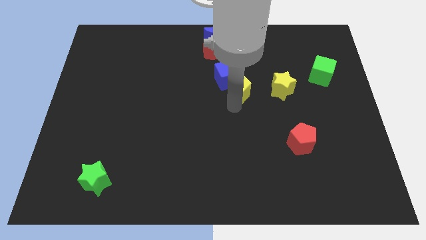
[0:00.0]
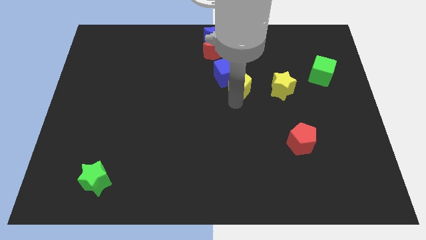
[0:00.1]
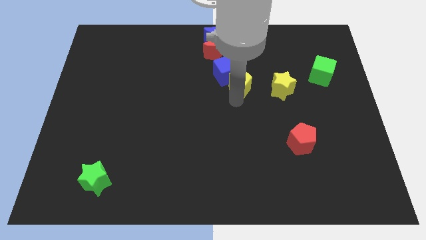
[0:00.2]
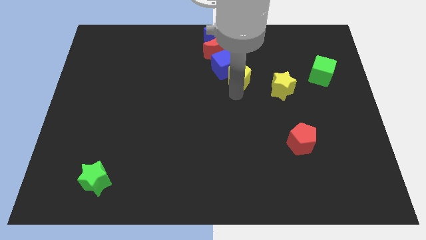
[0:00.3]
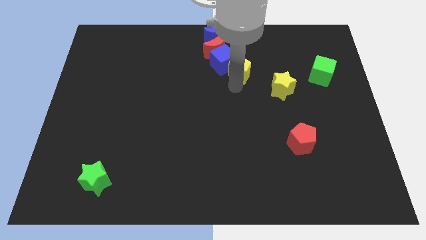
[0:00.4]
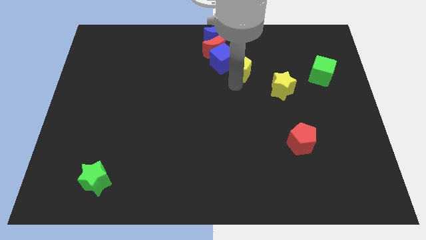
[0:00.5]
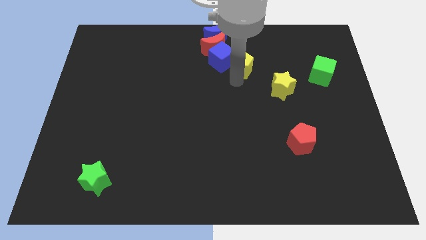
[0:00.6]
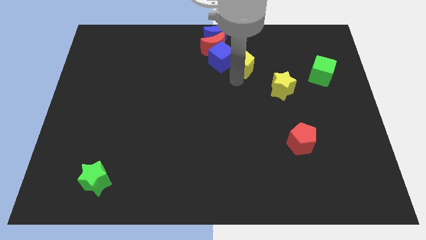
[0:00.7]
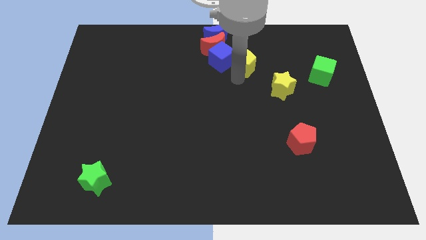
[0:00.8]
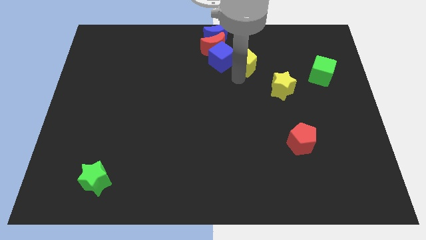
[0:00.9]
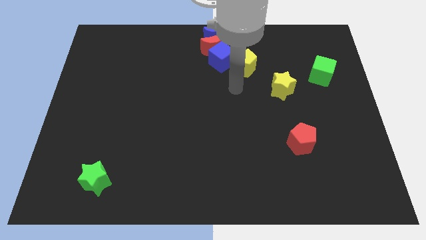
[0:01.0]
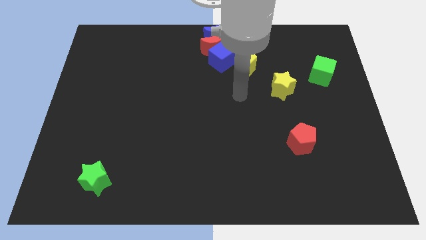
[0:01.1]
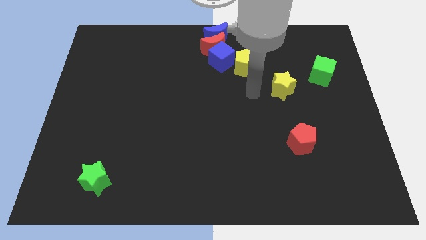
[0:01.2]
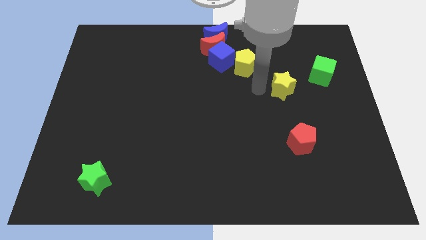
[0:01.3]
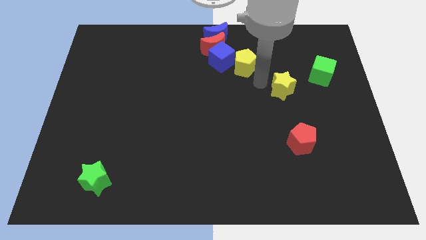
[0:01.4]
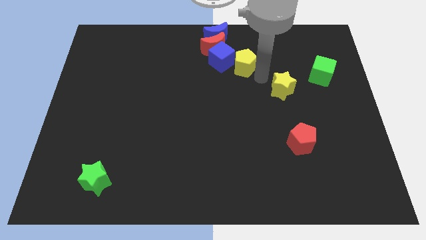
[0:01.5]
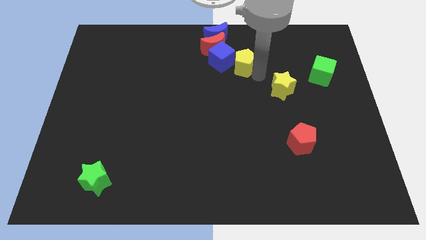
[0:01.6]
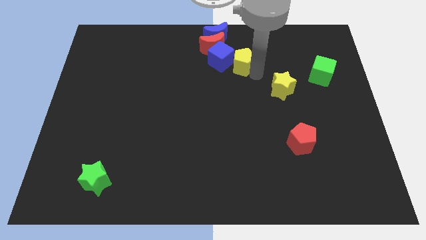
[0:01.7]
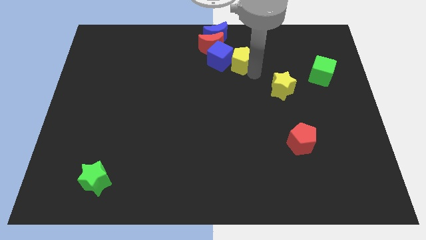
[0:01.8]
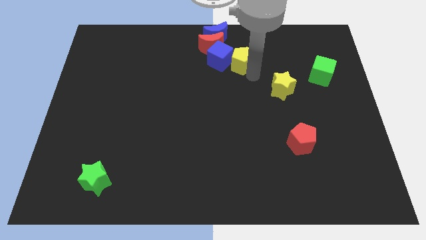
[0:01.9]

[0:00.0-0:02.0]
move the blue cube along with the yellow pentagon to the top center

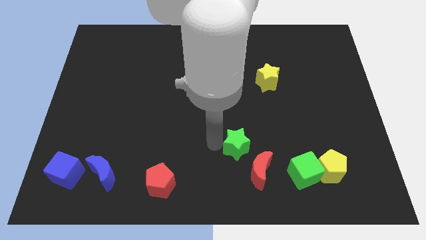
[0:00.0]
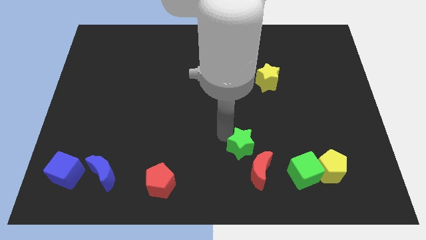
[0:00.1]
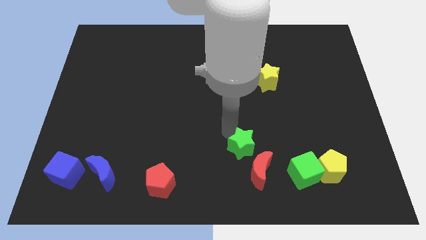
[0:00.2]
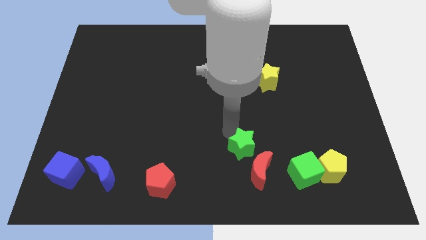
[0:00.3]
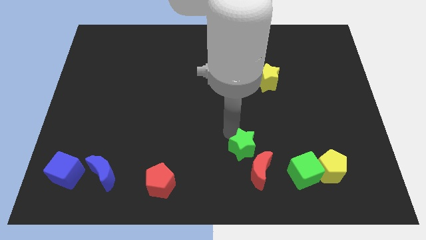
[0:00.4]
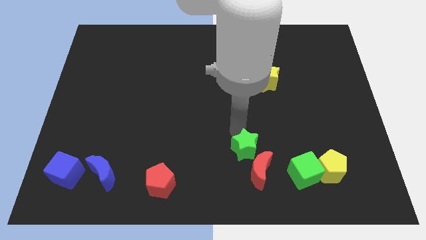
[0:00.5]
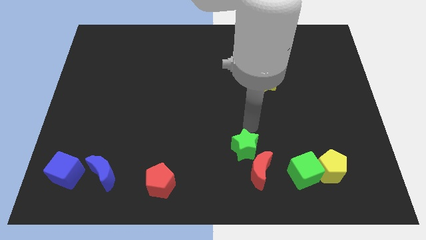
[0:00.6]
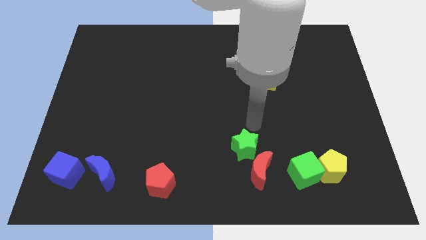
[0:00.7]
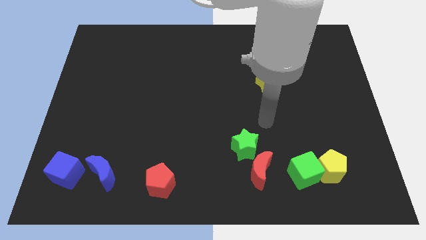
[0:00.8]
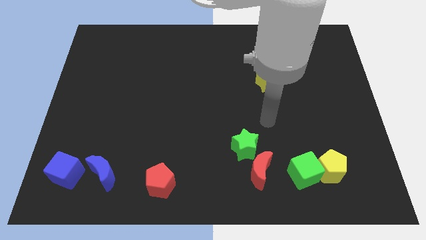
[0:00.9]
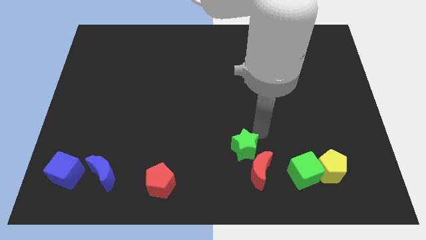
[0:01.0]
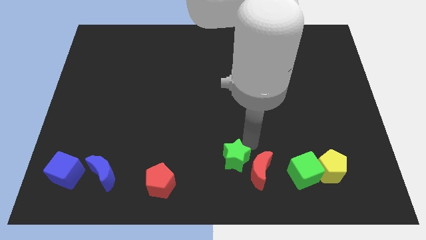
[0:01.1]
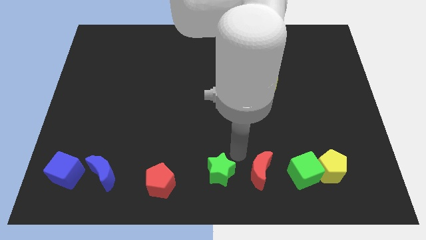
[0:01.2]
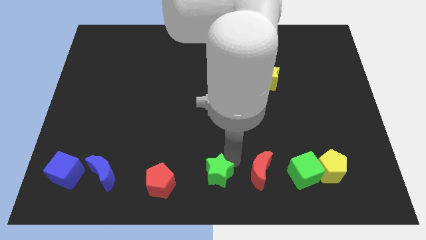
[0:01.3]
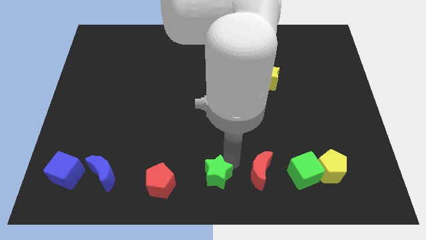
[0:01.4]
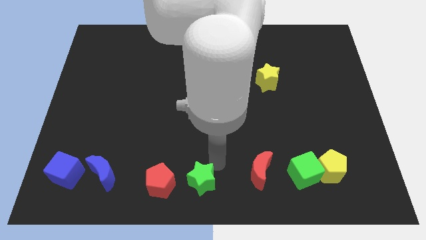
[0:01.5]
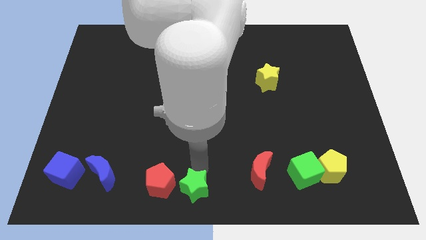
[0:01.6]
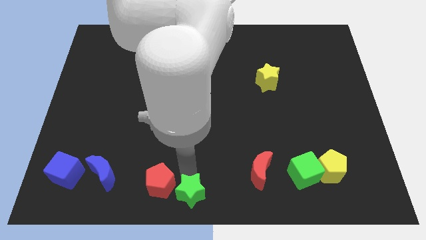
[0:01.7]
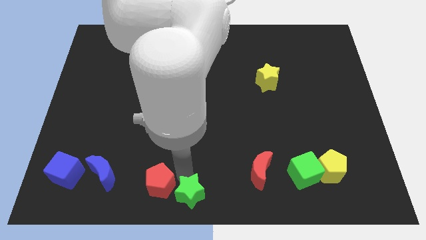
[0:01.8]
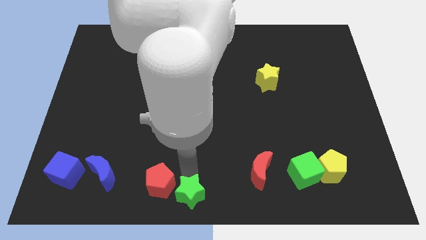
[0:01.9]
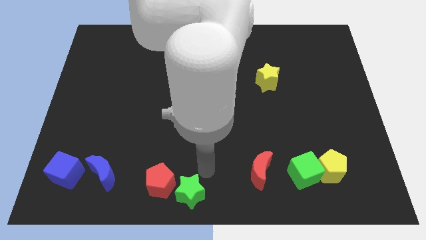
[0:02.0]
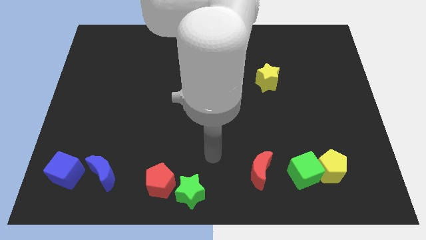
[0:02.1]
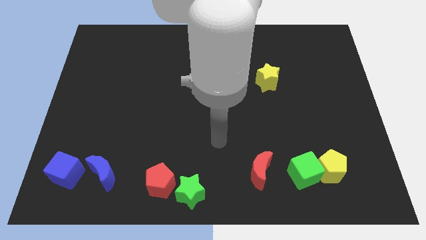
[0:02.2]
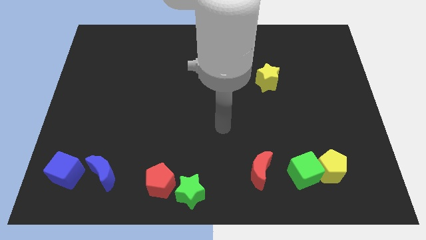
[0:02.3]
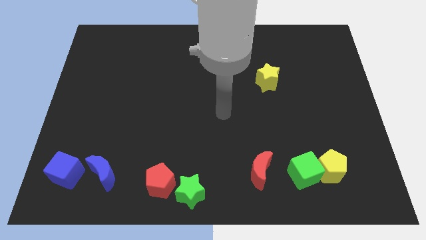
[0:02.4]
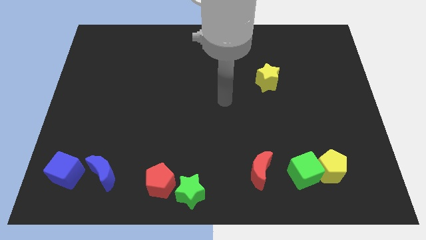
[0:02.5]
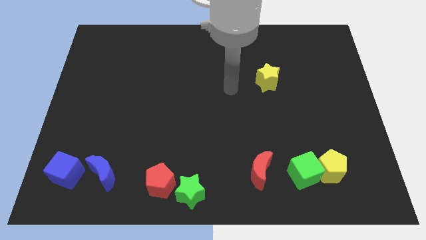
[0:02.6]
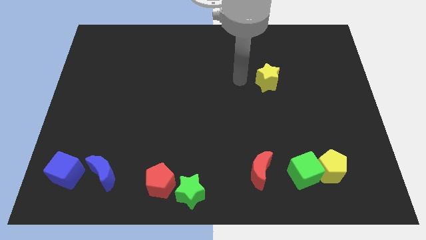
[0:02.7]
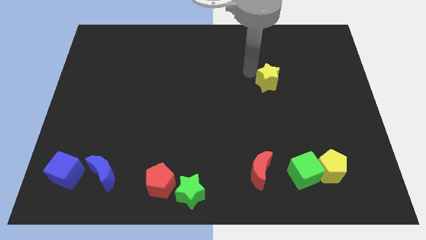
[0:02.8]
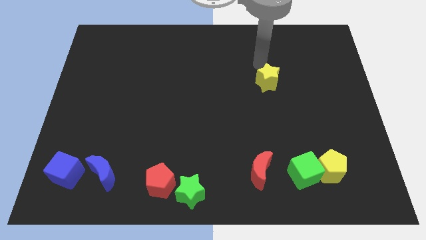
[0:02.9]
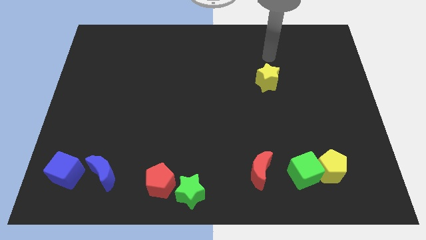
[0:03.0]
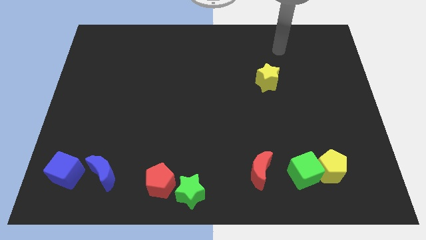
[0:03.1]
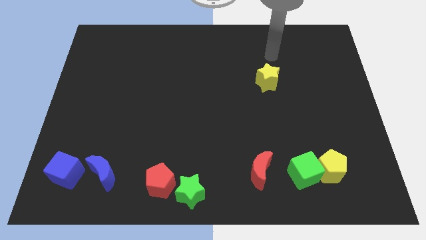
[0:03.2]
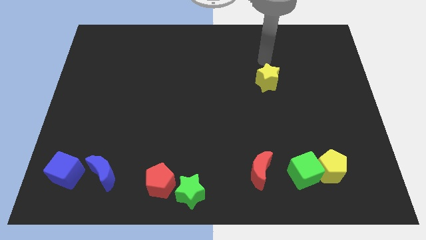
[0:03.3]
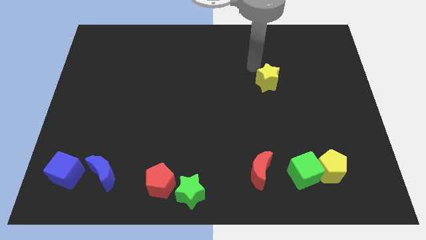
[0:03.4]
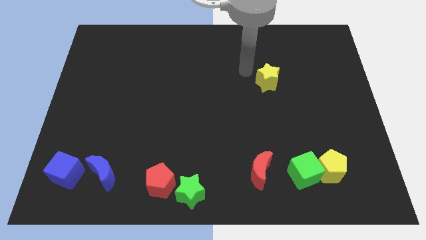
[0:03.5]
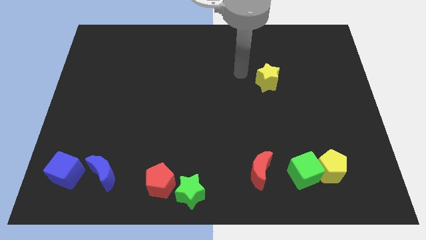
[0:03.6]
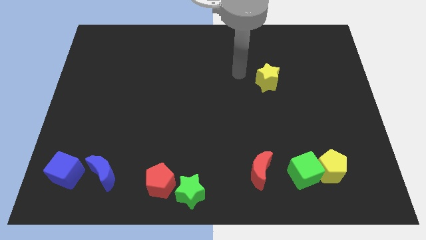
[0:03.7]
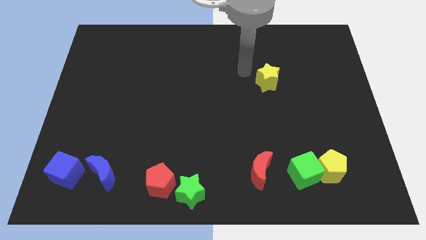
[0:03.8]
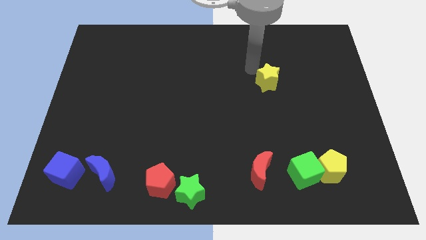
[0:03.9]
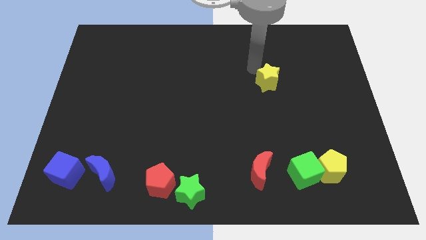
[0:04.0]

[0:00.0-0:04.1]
place the arm near the yellow star

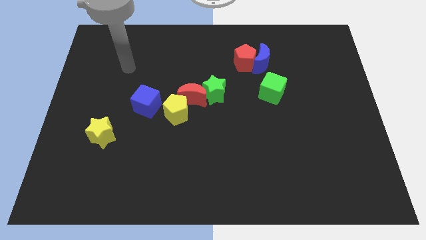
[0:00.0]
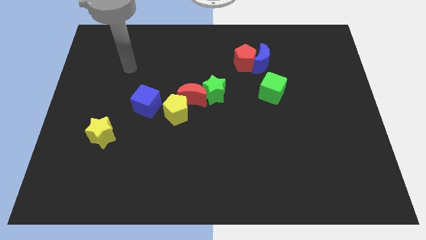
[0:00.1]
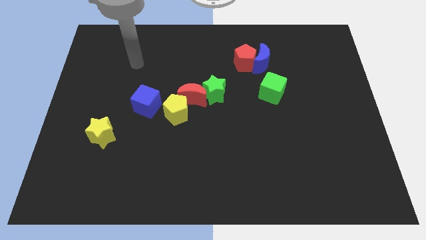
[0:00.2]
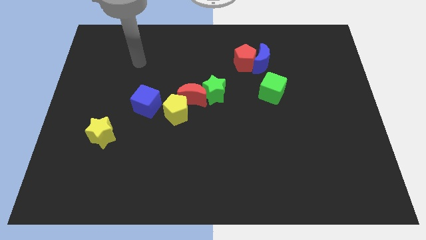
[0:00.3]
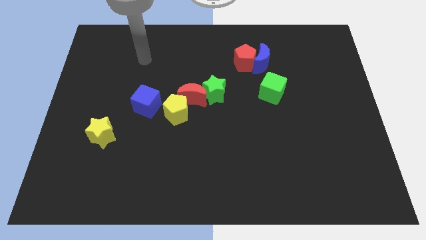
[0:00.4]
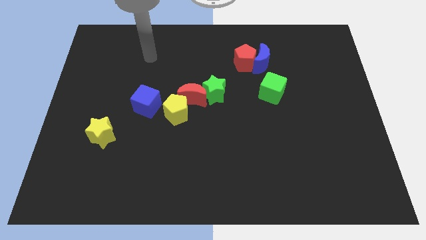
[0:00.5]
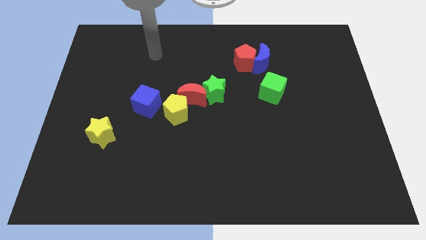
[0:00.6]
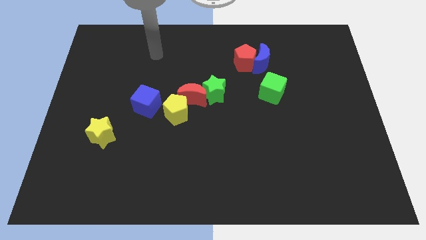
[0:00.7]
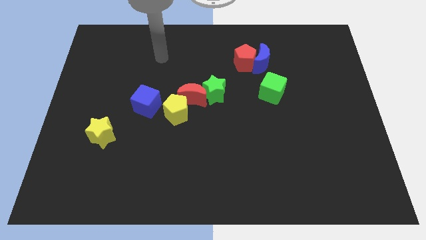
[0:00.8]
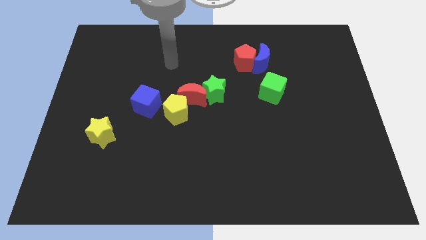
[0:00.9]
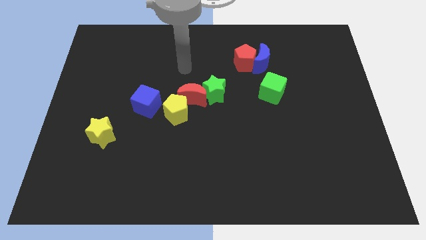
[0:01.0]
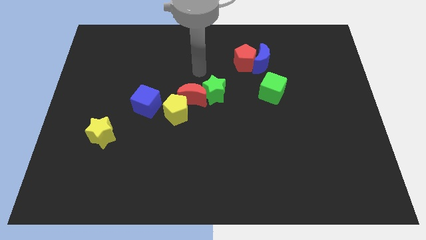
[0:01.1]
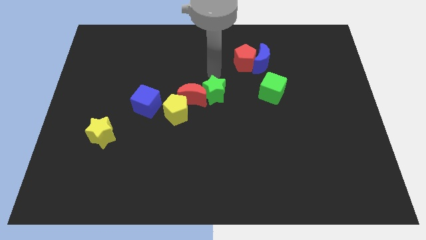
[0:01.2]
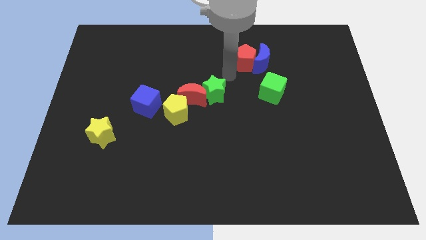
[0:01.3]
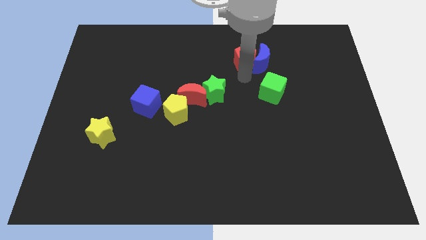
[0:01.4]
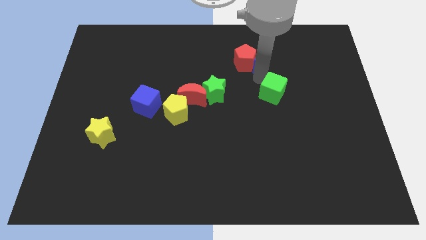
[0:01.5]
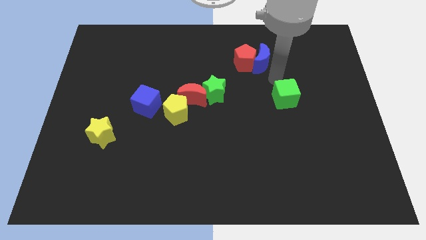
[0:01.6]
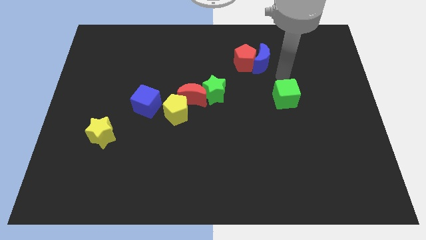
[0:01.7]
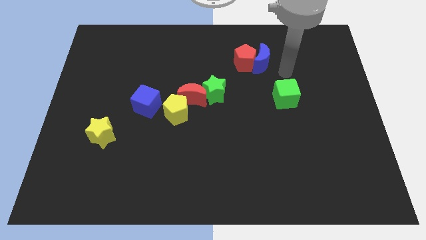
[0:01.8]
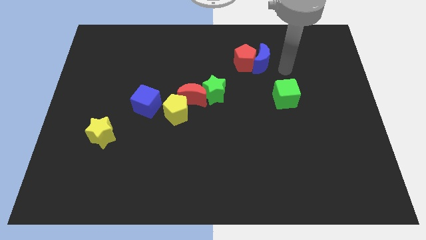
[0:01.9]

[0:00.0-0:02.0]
slightly move the green cube towards the bottom

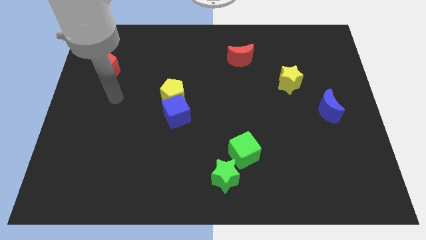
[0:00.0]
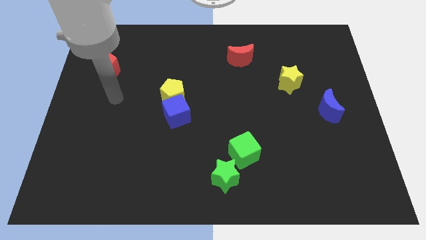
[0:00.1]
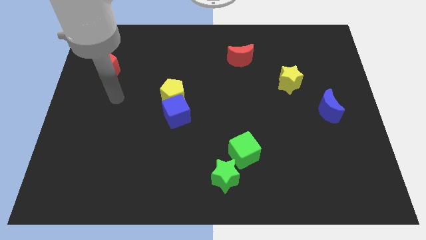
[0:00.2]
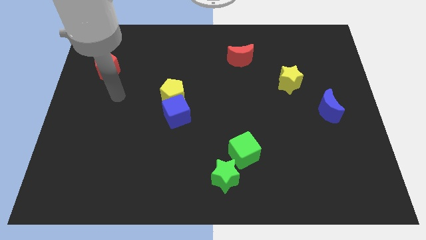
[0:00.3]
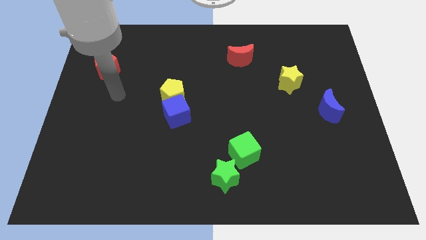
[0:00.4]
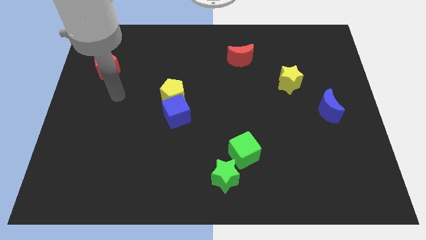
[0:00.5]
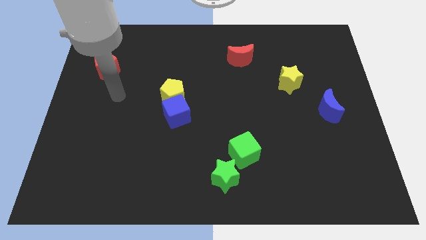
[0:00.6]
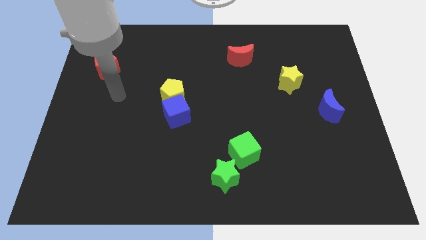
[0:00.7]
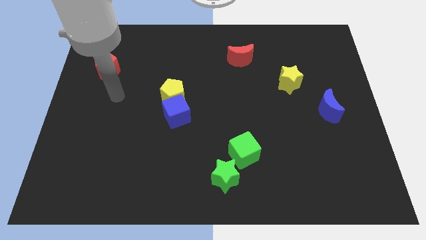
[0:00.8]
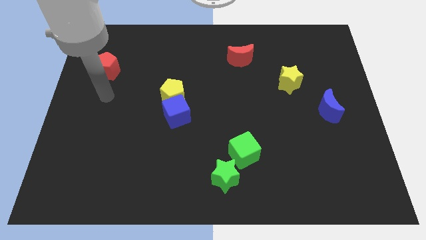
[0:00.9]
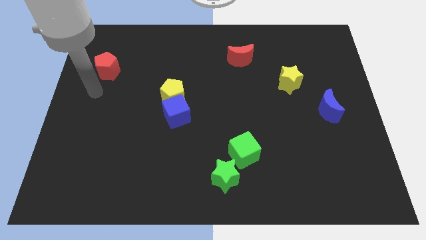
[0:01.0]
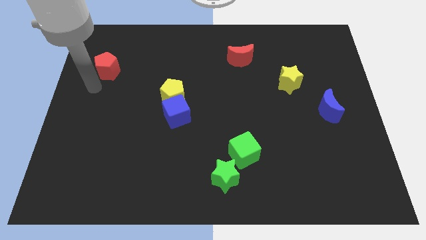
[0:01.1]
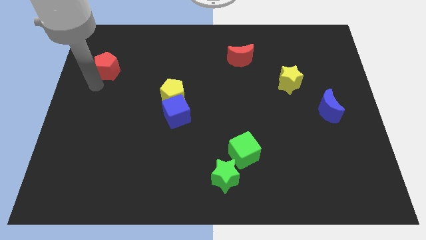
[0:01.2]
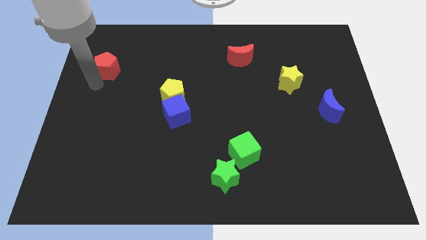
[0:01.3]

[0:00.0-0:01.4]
place your arm to the bottom of red pentagon
